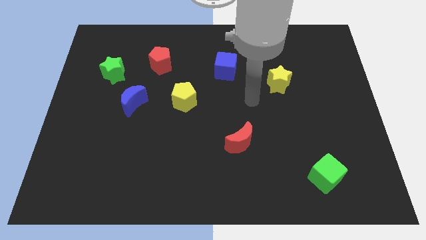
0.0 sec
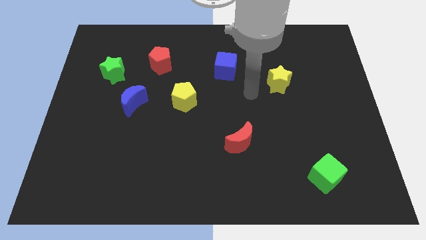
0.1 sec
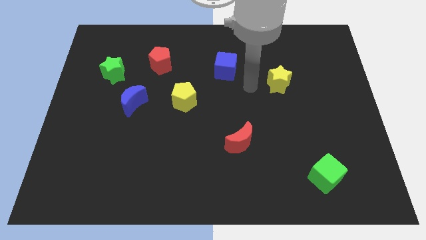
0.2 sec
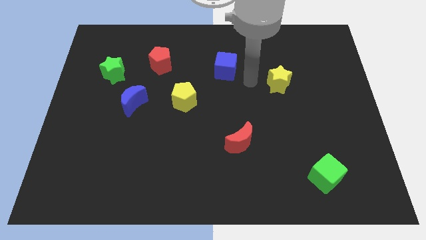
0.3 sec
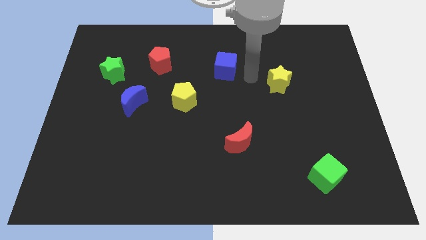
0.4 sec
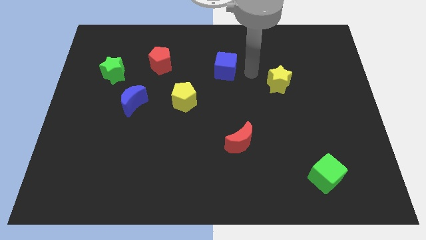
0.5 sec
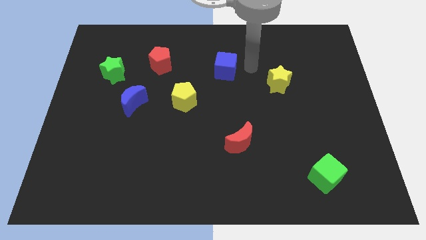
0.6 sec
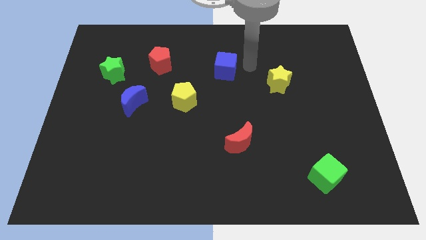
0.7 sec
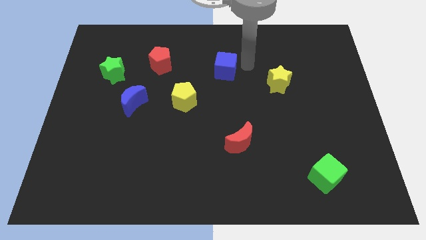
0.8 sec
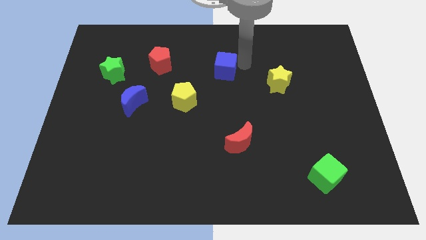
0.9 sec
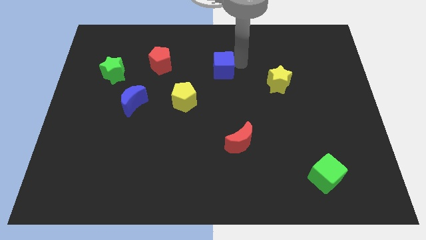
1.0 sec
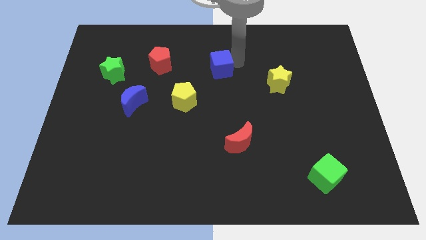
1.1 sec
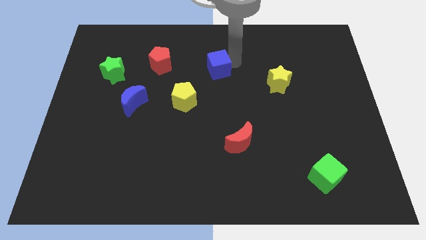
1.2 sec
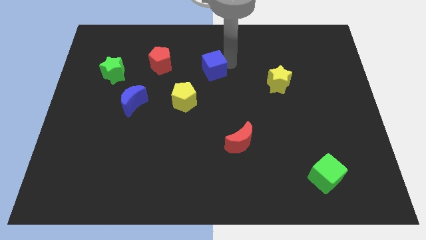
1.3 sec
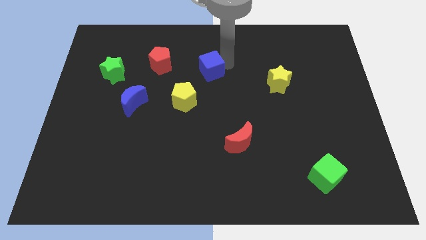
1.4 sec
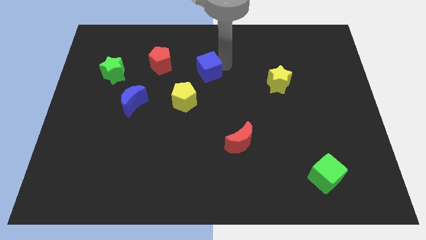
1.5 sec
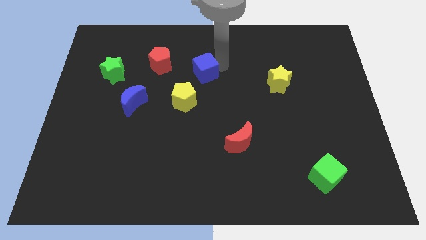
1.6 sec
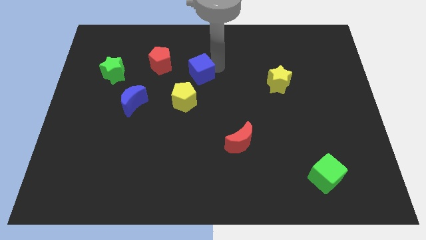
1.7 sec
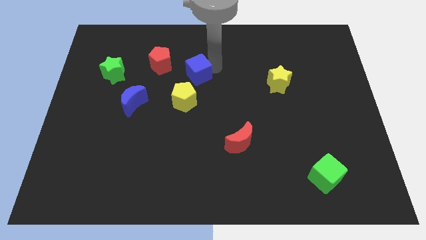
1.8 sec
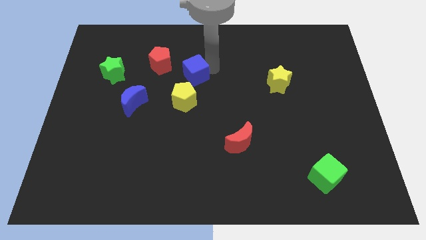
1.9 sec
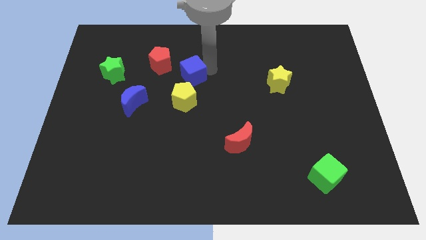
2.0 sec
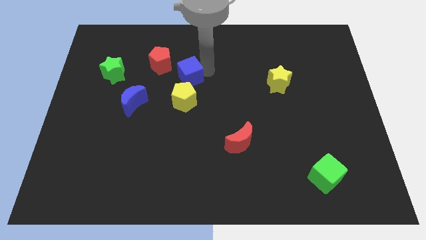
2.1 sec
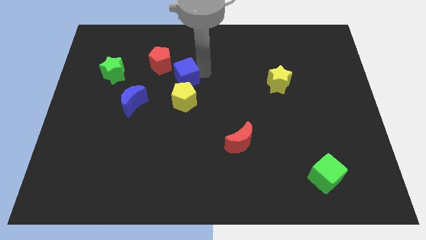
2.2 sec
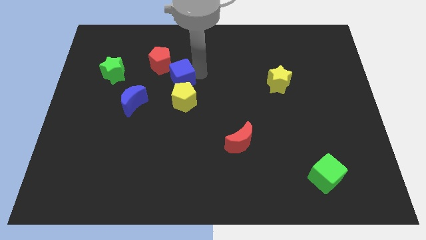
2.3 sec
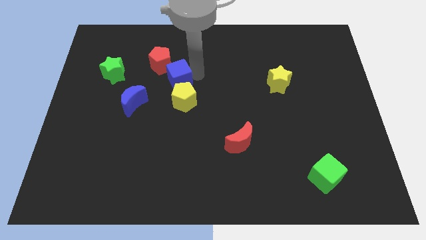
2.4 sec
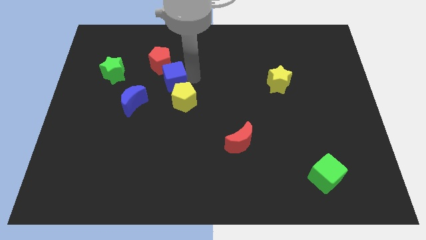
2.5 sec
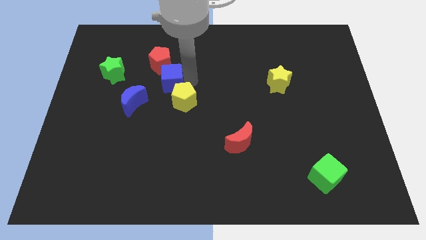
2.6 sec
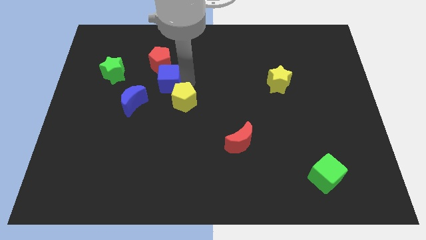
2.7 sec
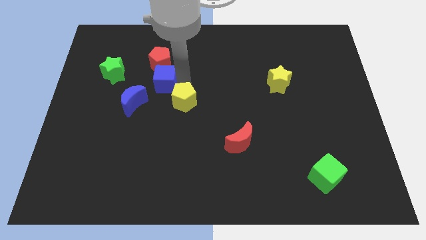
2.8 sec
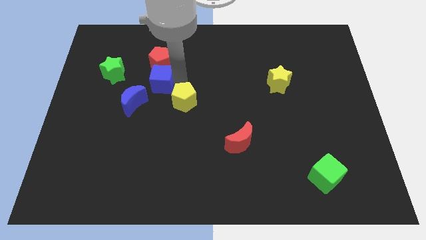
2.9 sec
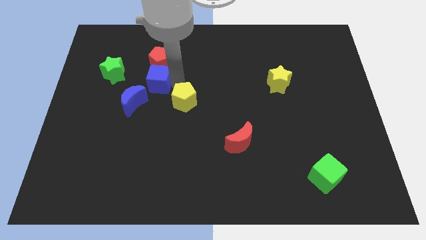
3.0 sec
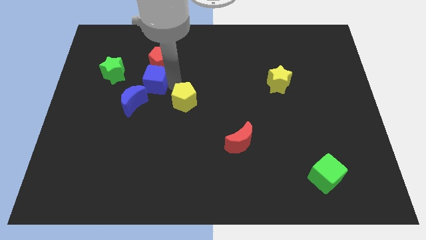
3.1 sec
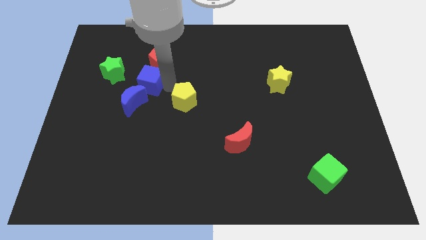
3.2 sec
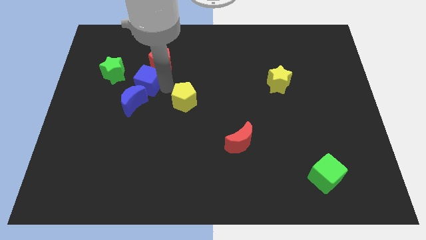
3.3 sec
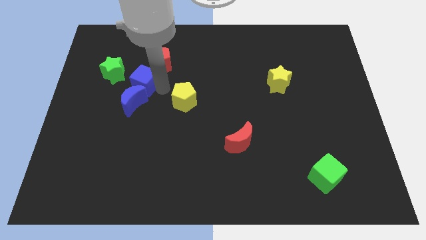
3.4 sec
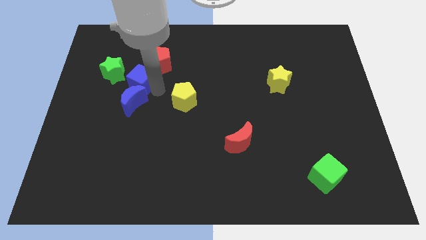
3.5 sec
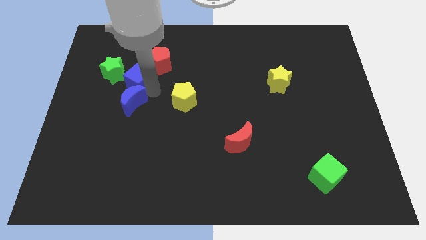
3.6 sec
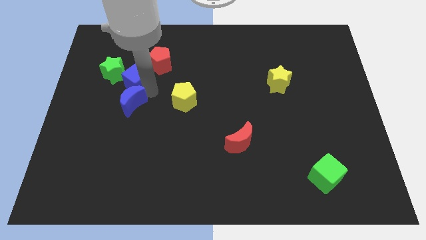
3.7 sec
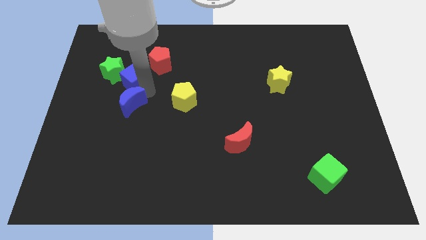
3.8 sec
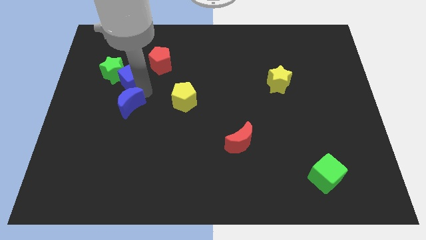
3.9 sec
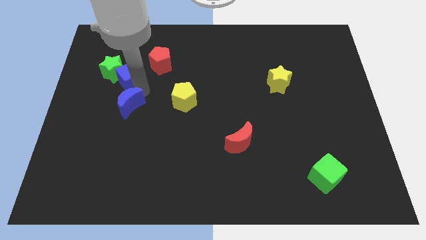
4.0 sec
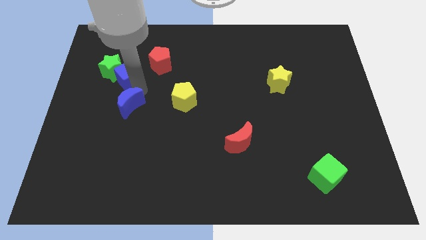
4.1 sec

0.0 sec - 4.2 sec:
push the blue cube towards the green star

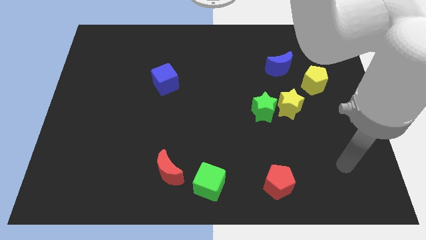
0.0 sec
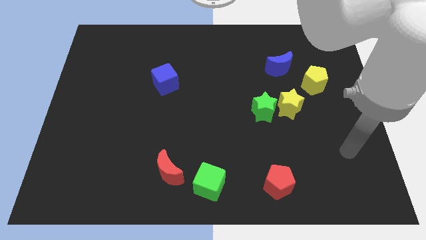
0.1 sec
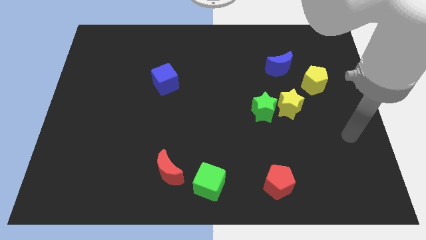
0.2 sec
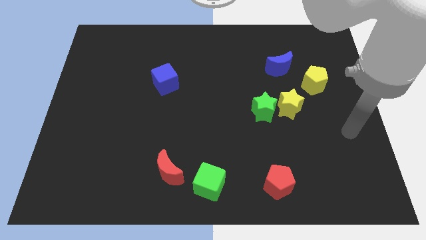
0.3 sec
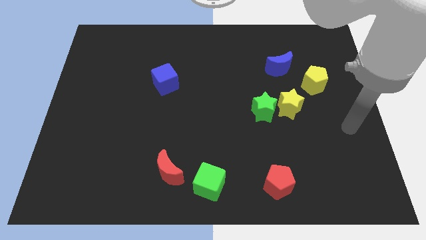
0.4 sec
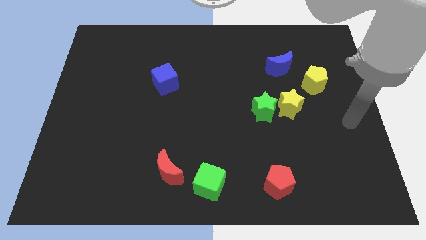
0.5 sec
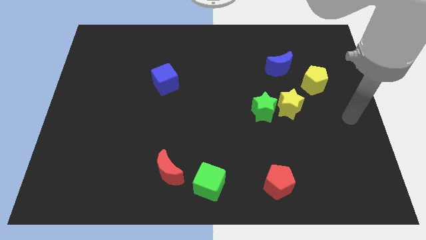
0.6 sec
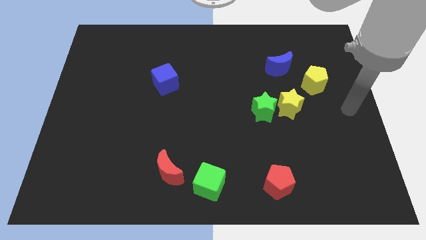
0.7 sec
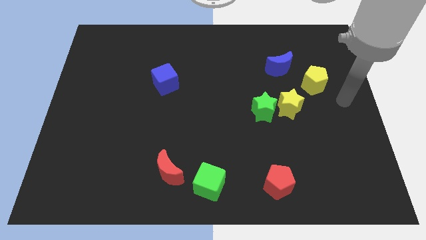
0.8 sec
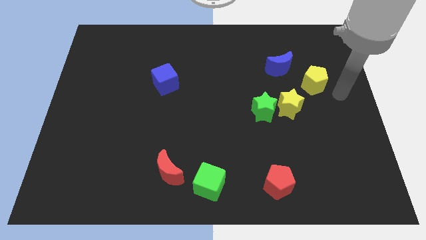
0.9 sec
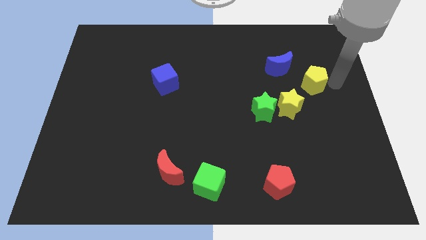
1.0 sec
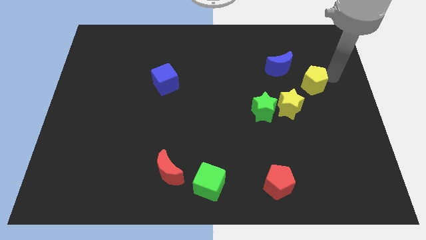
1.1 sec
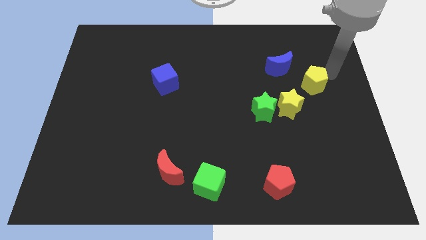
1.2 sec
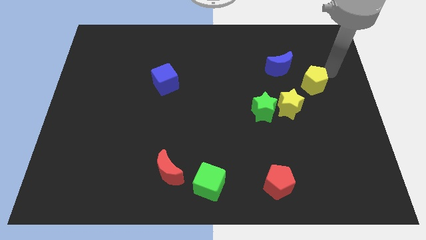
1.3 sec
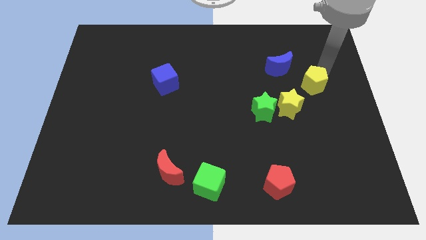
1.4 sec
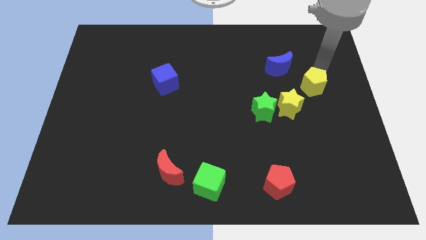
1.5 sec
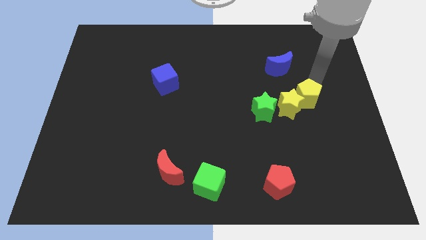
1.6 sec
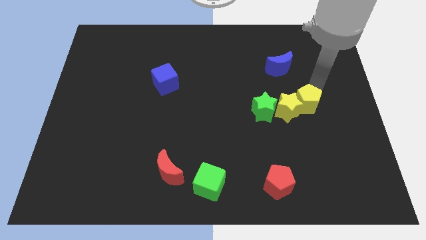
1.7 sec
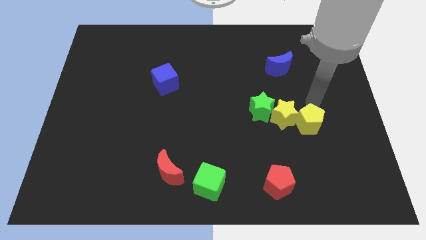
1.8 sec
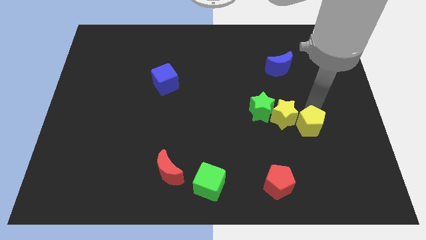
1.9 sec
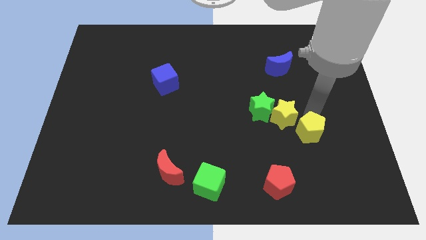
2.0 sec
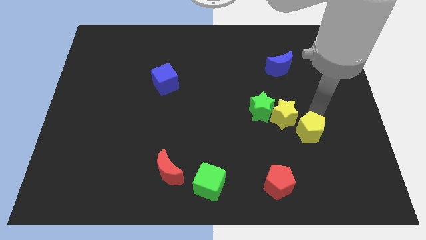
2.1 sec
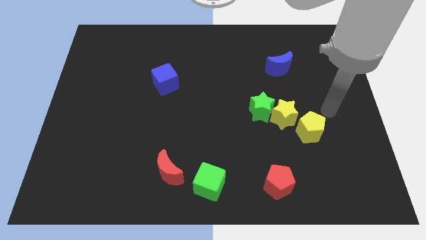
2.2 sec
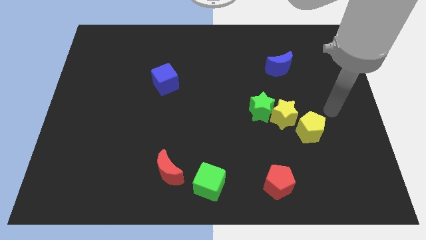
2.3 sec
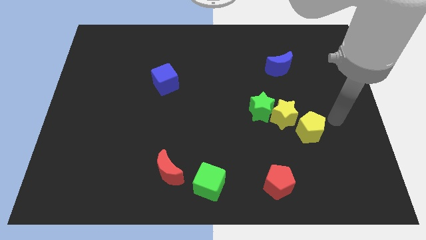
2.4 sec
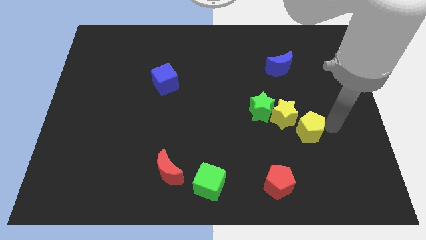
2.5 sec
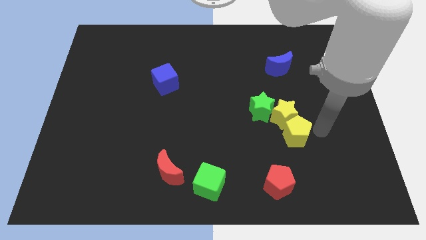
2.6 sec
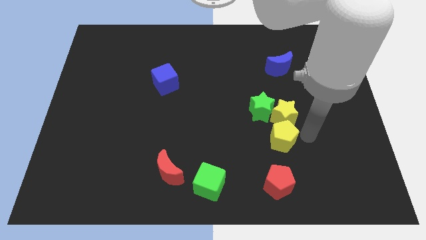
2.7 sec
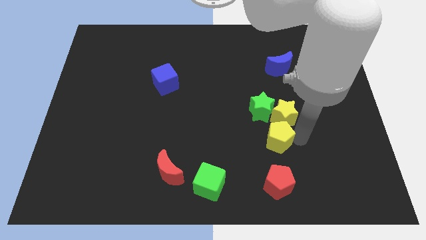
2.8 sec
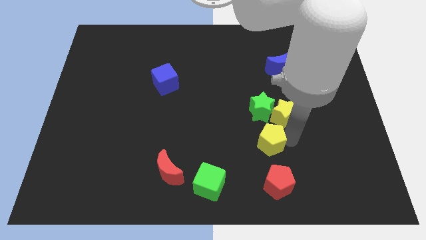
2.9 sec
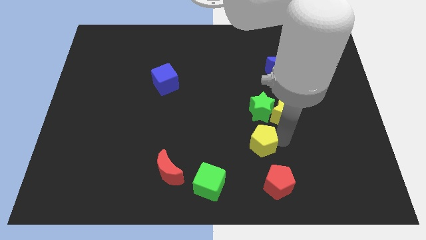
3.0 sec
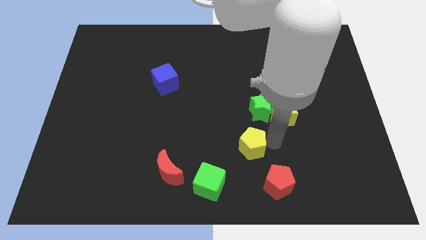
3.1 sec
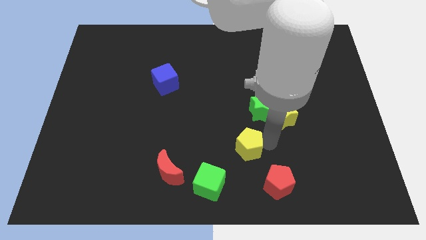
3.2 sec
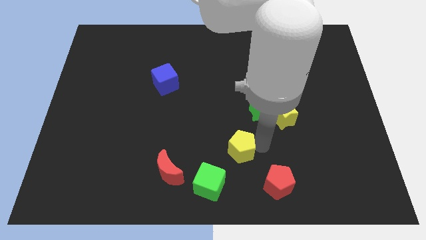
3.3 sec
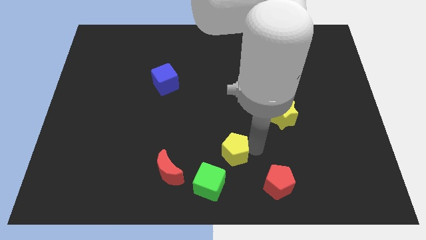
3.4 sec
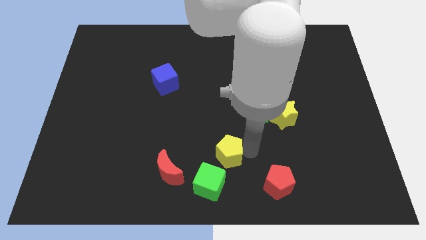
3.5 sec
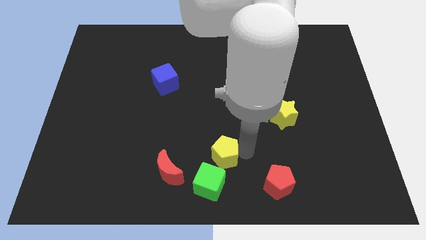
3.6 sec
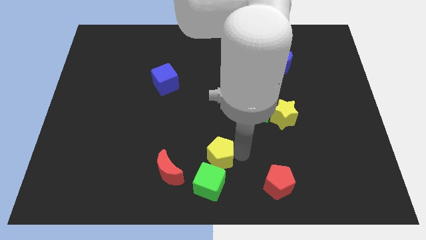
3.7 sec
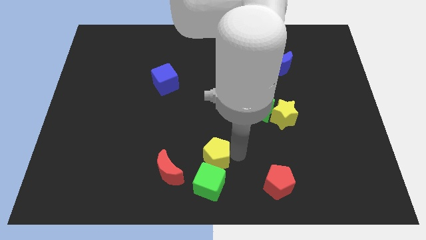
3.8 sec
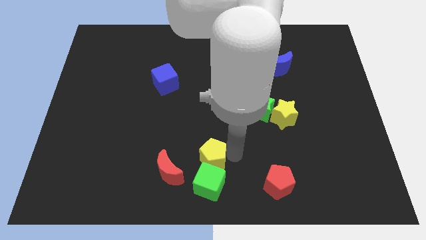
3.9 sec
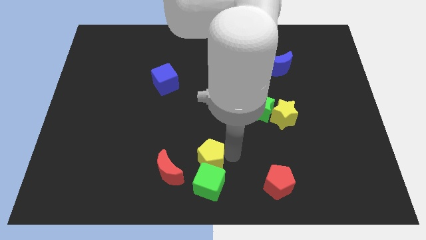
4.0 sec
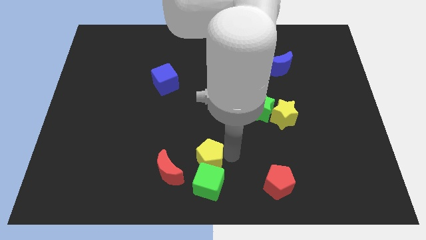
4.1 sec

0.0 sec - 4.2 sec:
push the yellow pentagon close to the green cube

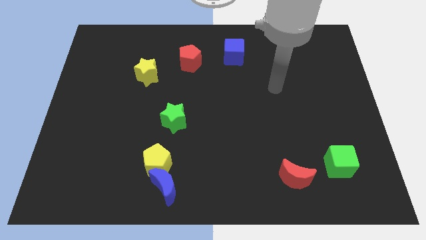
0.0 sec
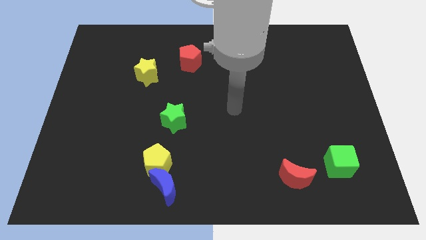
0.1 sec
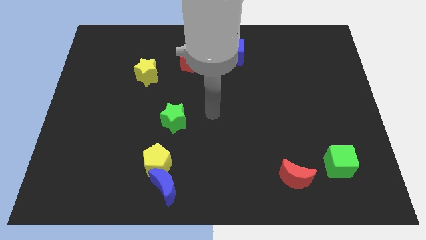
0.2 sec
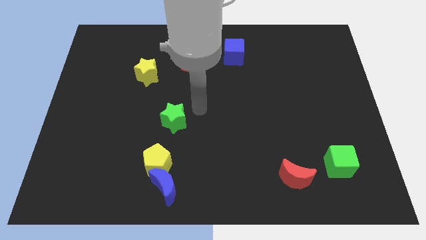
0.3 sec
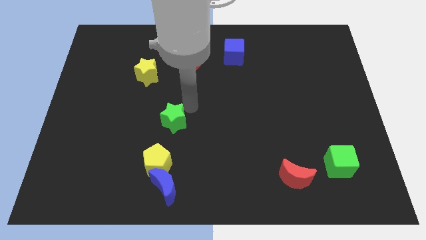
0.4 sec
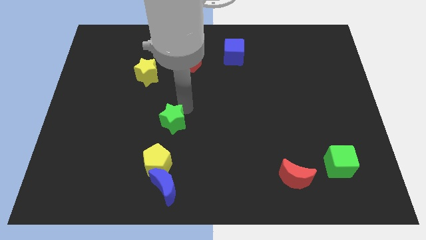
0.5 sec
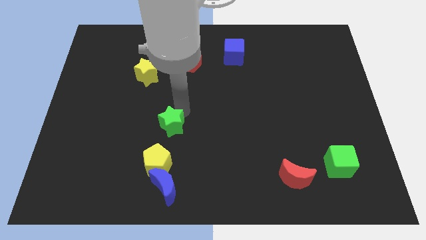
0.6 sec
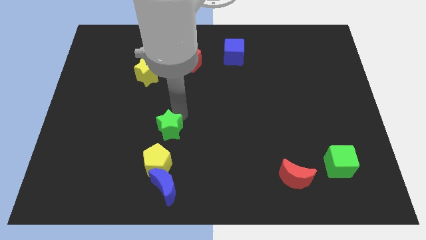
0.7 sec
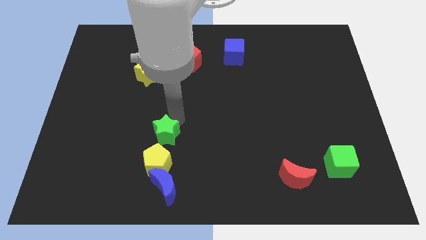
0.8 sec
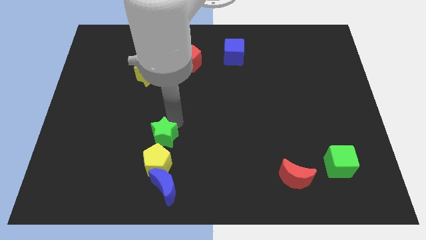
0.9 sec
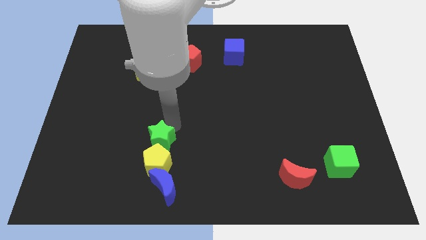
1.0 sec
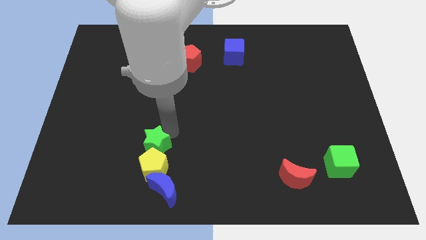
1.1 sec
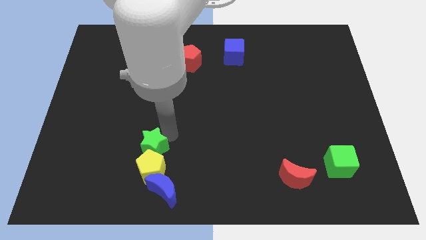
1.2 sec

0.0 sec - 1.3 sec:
put the green star towards the yellow pentagon
